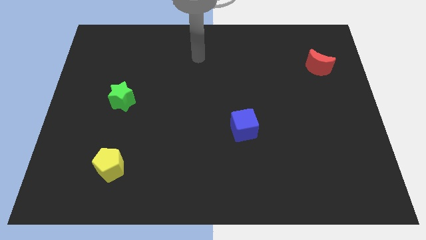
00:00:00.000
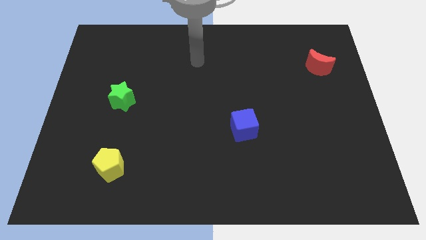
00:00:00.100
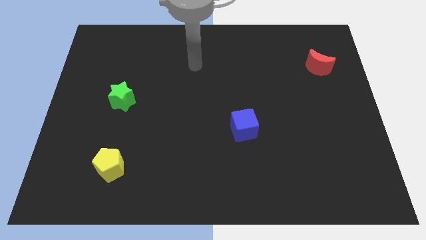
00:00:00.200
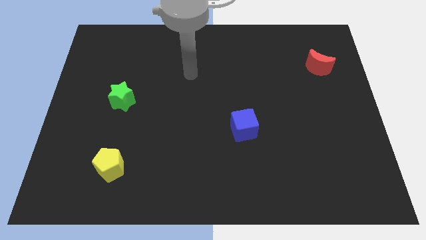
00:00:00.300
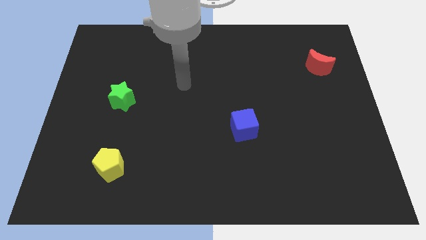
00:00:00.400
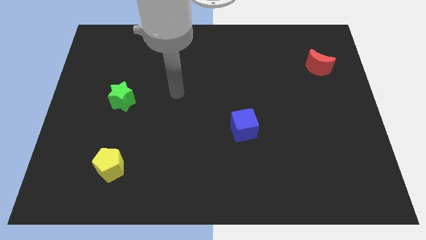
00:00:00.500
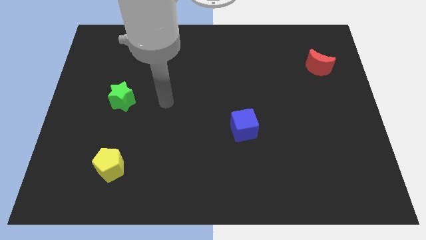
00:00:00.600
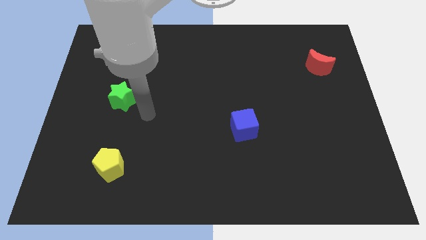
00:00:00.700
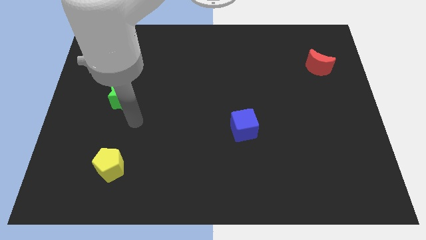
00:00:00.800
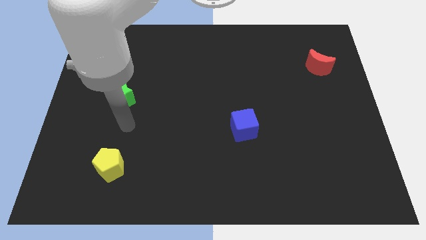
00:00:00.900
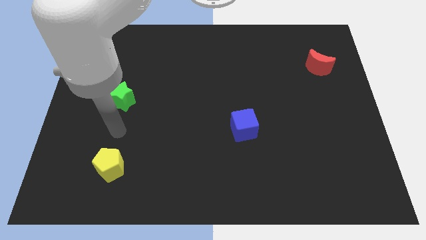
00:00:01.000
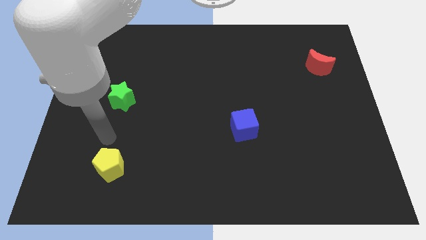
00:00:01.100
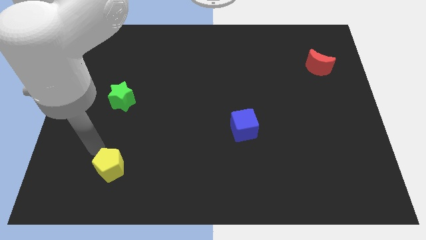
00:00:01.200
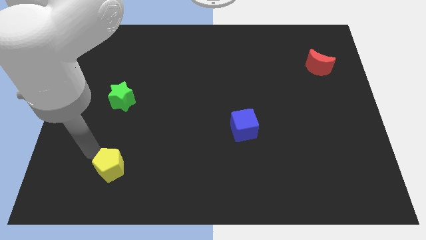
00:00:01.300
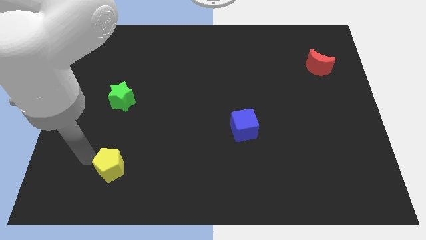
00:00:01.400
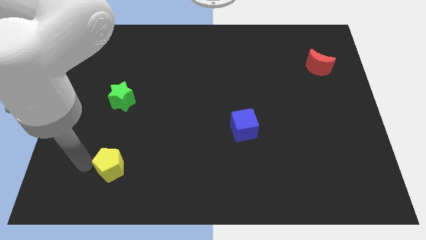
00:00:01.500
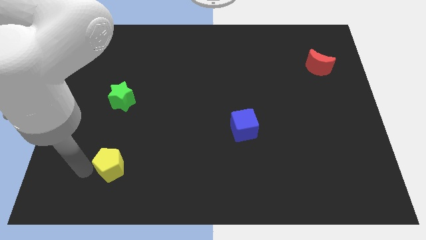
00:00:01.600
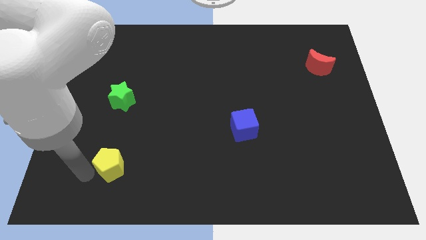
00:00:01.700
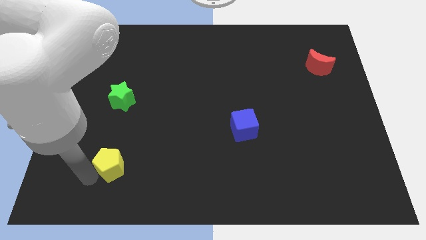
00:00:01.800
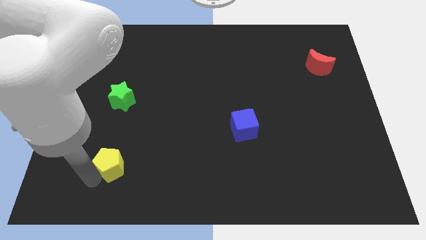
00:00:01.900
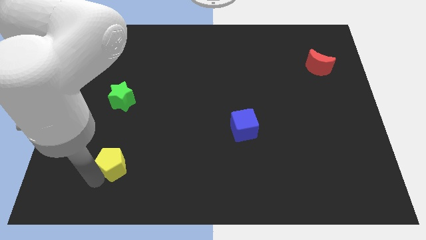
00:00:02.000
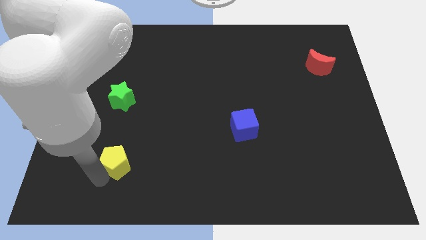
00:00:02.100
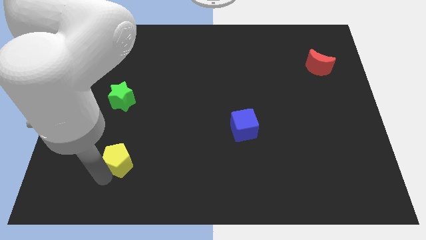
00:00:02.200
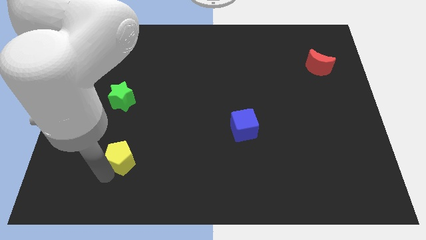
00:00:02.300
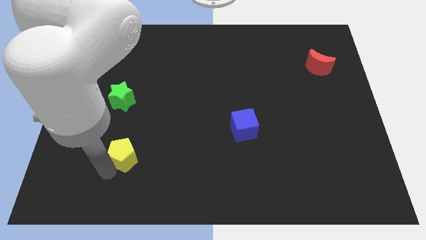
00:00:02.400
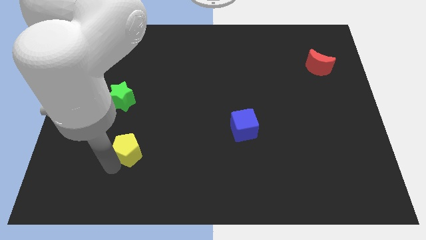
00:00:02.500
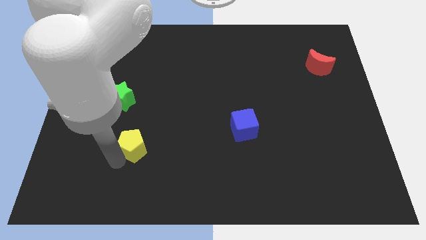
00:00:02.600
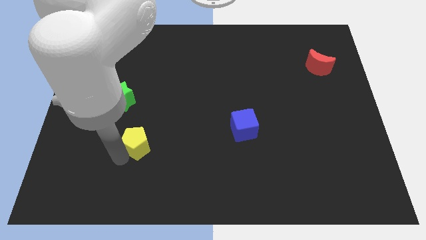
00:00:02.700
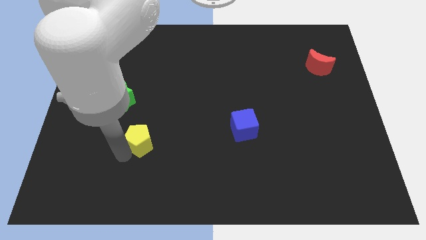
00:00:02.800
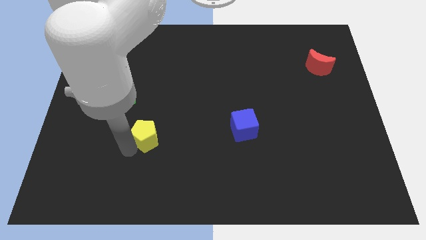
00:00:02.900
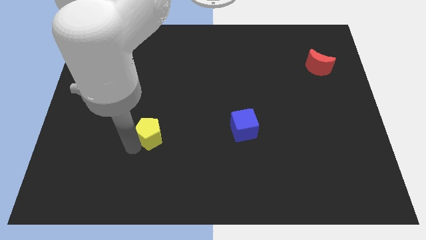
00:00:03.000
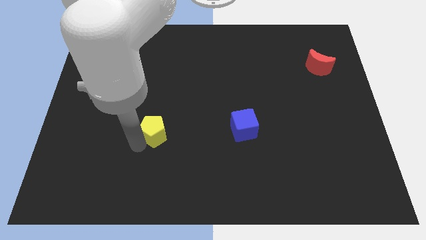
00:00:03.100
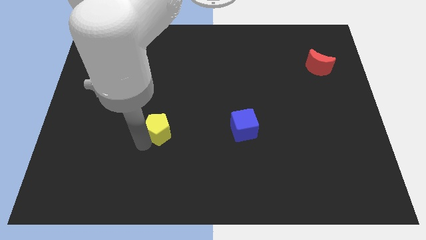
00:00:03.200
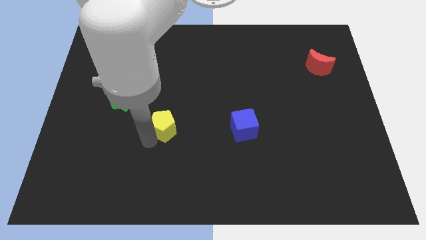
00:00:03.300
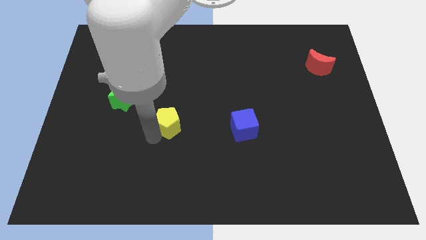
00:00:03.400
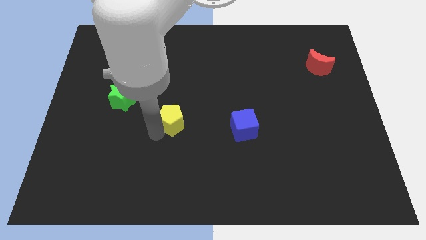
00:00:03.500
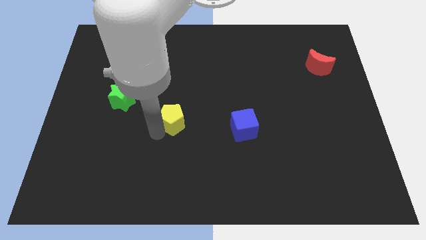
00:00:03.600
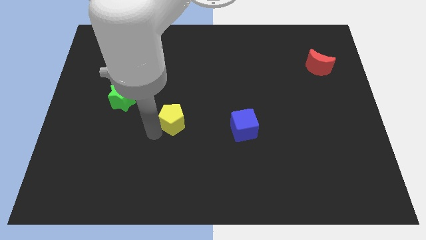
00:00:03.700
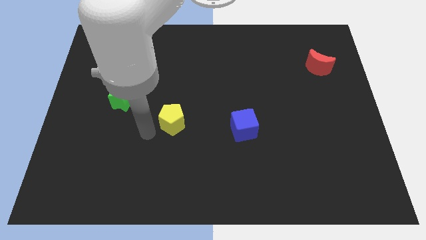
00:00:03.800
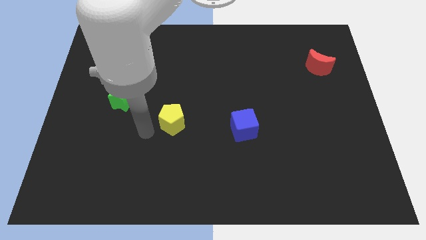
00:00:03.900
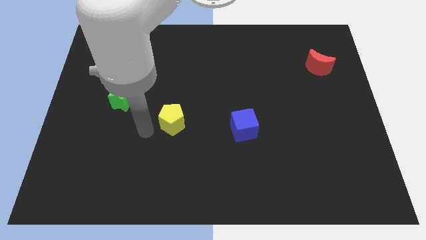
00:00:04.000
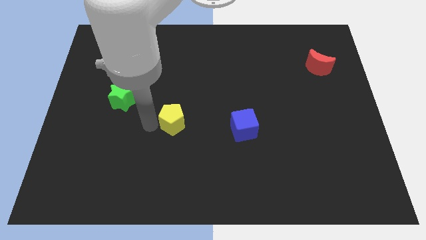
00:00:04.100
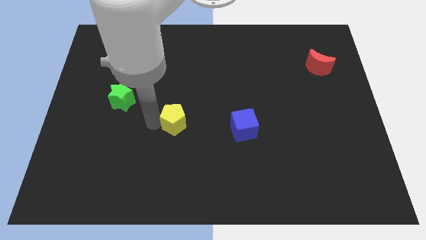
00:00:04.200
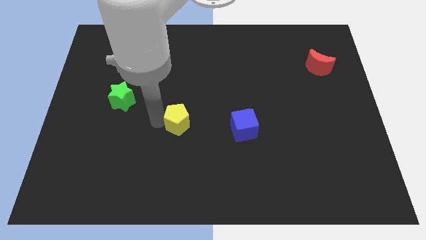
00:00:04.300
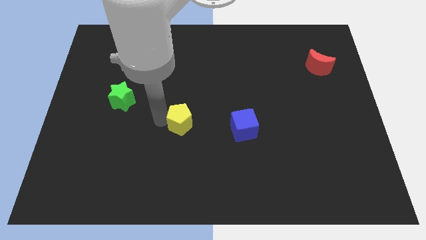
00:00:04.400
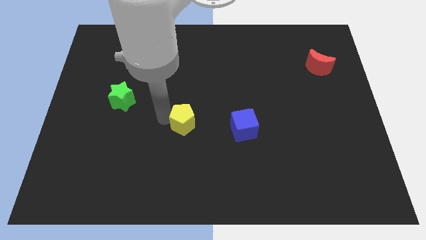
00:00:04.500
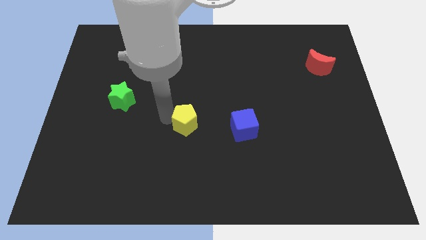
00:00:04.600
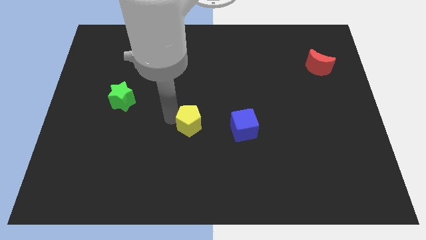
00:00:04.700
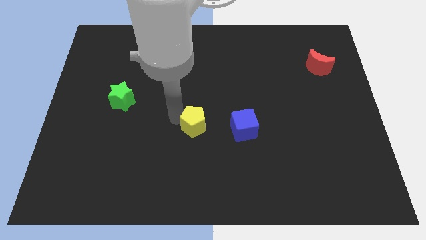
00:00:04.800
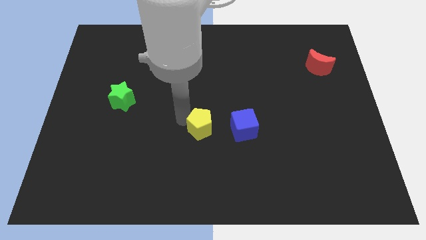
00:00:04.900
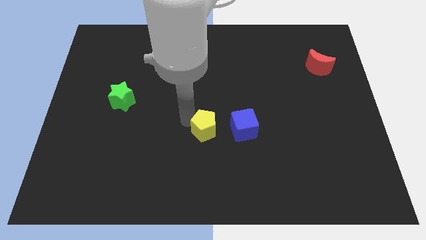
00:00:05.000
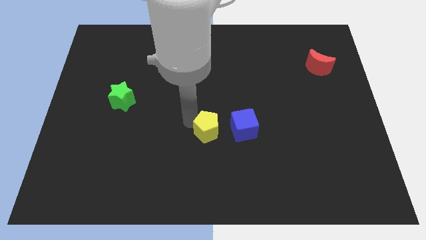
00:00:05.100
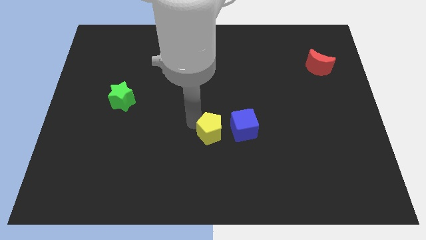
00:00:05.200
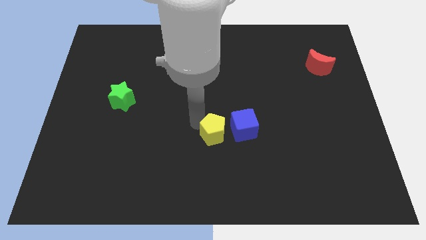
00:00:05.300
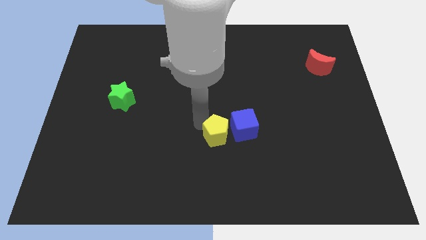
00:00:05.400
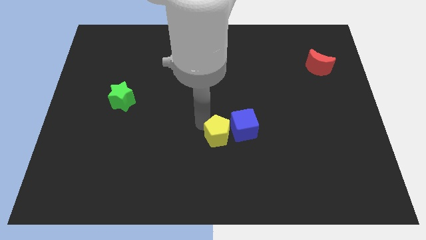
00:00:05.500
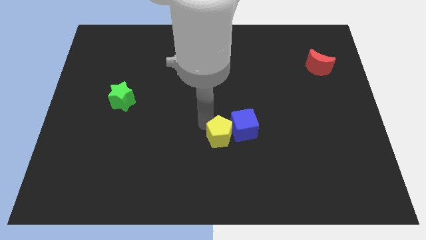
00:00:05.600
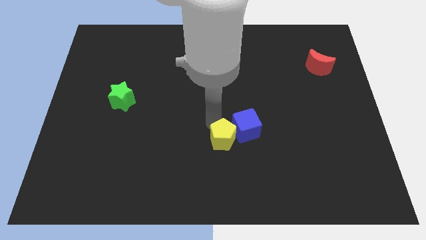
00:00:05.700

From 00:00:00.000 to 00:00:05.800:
push the yellow pentagon close to the blue cube

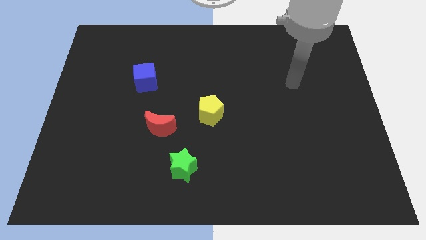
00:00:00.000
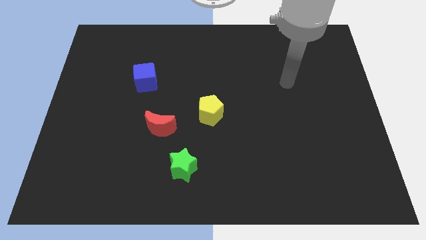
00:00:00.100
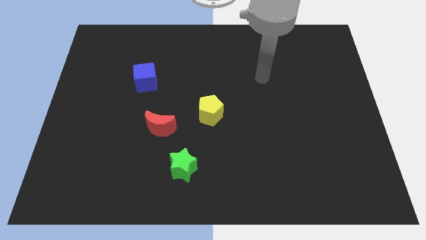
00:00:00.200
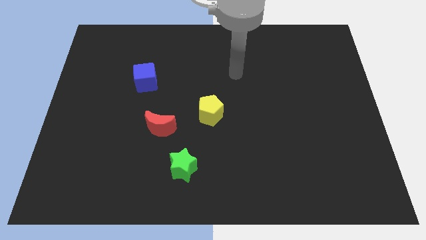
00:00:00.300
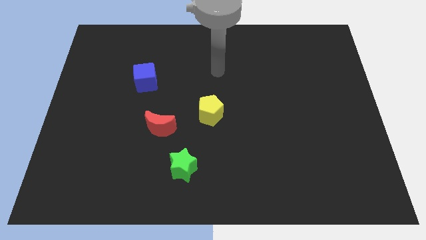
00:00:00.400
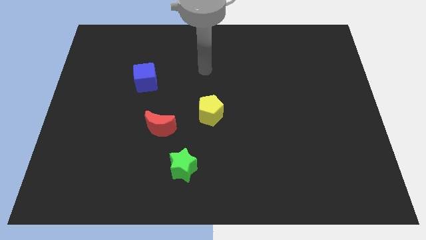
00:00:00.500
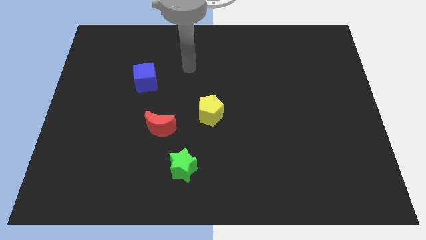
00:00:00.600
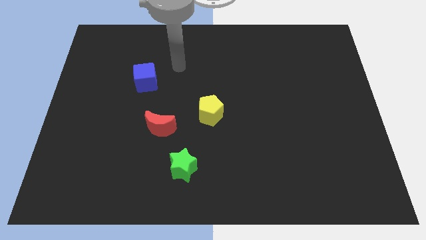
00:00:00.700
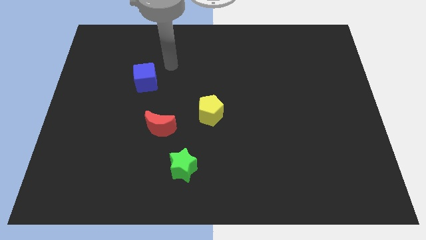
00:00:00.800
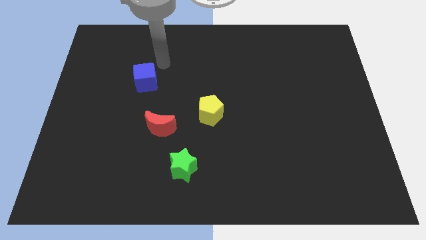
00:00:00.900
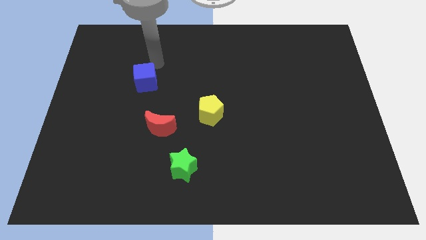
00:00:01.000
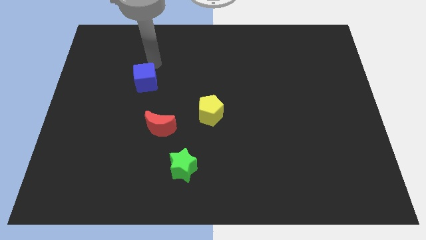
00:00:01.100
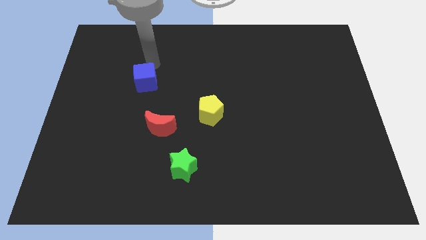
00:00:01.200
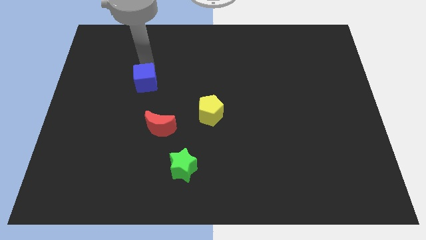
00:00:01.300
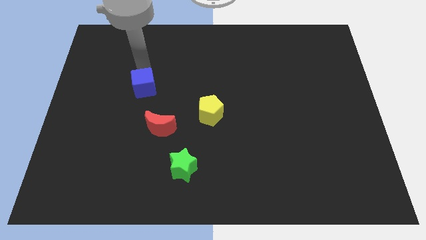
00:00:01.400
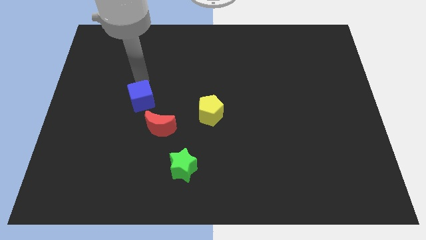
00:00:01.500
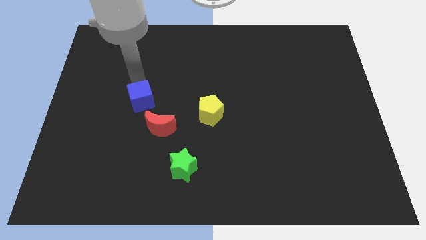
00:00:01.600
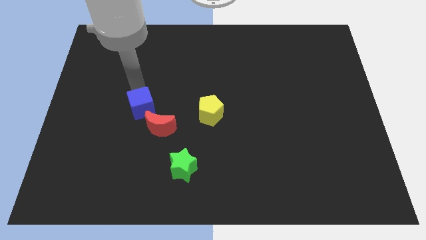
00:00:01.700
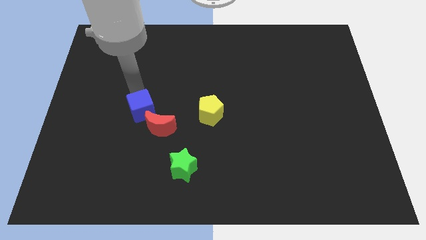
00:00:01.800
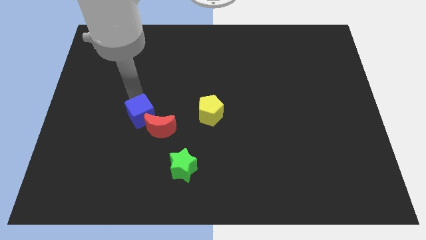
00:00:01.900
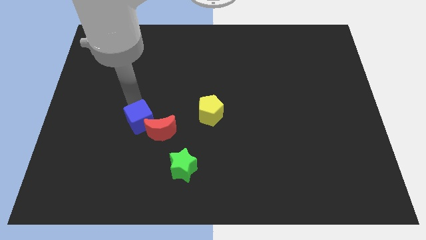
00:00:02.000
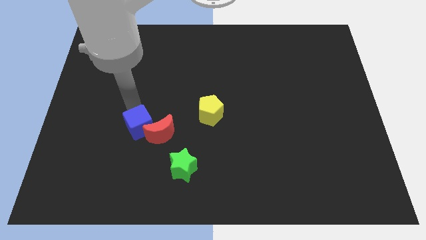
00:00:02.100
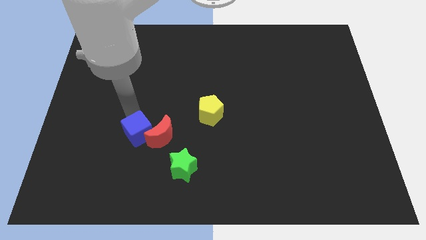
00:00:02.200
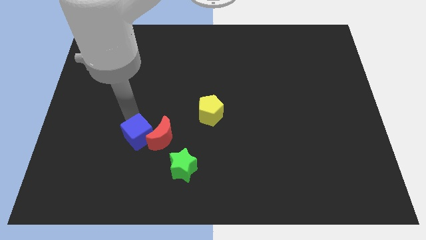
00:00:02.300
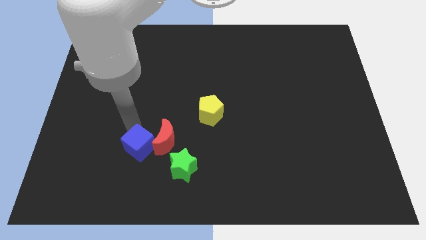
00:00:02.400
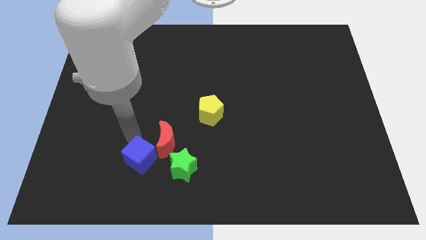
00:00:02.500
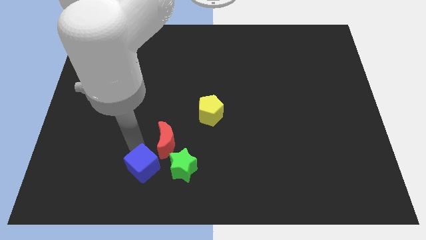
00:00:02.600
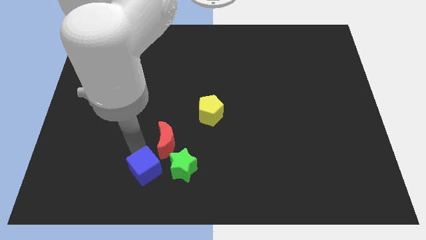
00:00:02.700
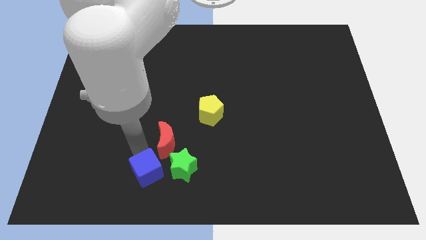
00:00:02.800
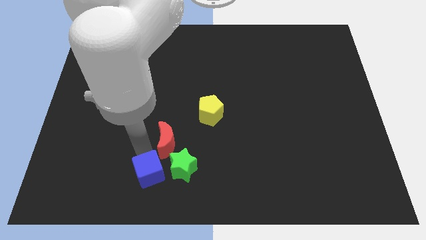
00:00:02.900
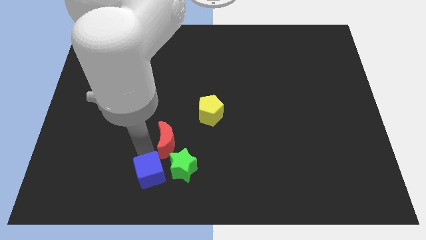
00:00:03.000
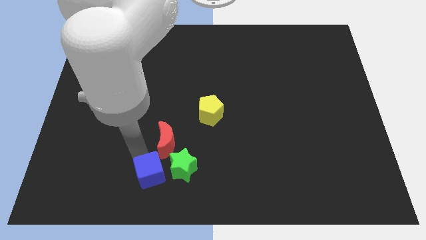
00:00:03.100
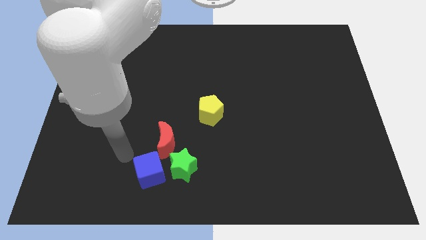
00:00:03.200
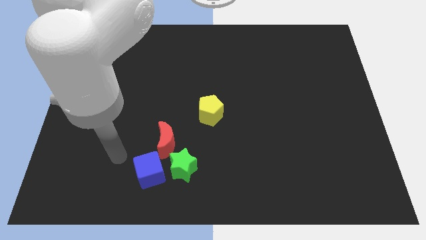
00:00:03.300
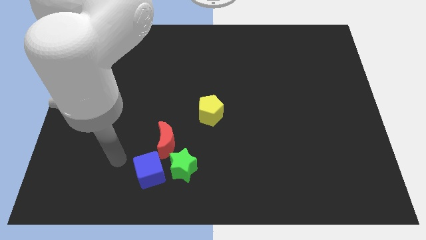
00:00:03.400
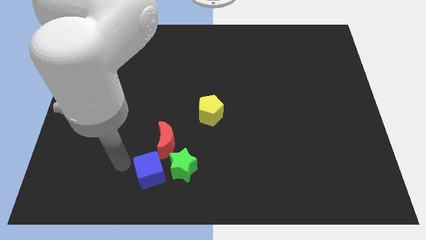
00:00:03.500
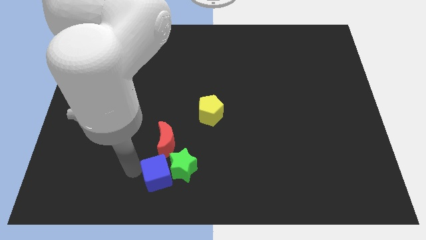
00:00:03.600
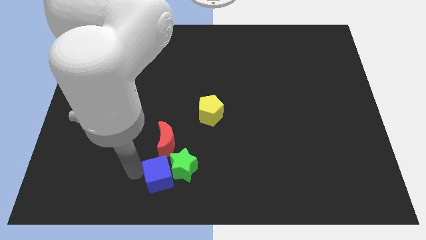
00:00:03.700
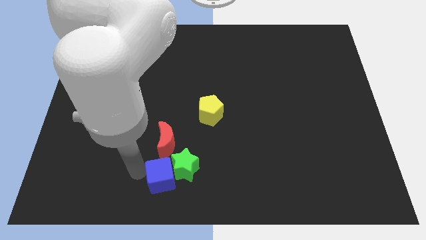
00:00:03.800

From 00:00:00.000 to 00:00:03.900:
slide the blue cube towards the green star
